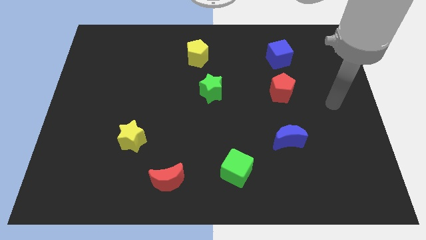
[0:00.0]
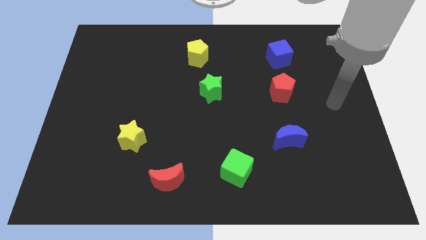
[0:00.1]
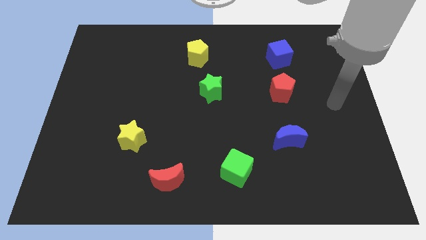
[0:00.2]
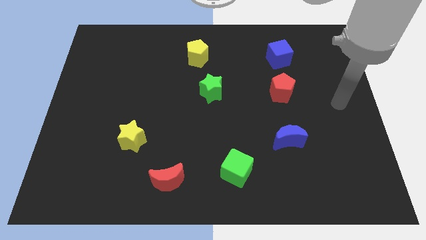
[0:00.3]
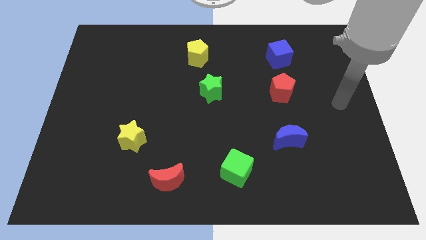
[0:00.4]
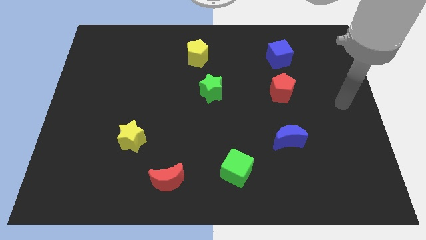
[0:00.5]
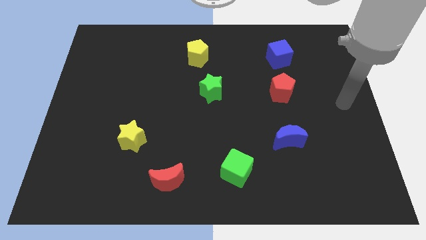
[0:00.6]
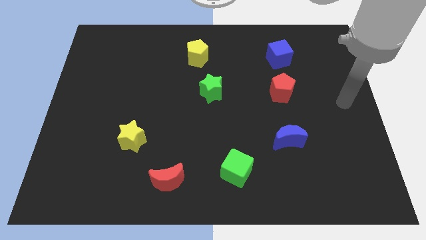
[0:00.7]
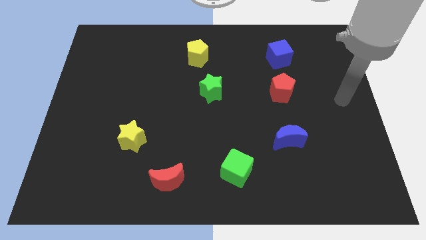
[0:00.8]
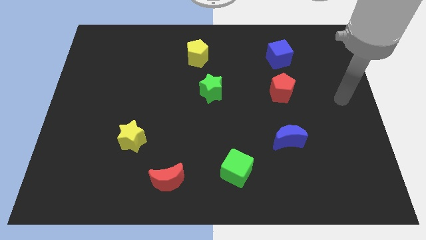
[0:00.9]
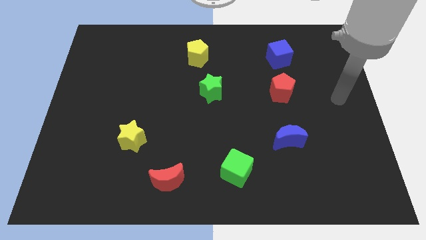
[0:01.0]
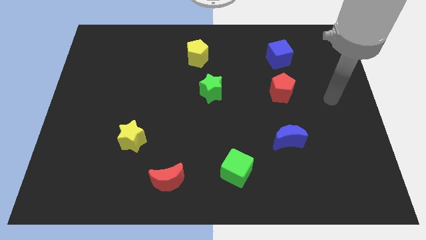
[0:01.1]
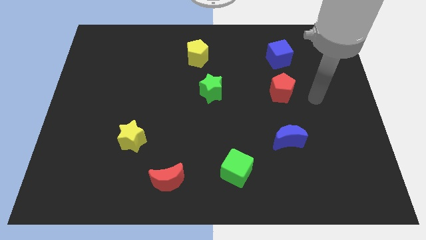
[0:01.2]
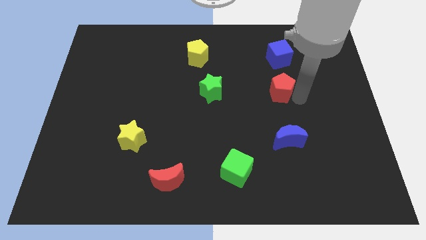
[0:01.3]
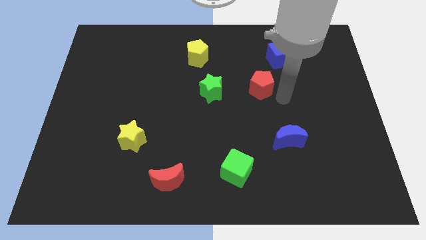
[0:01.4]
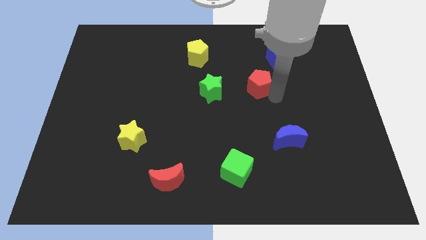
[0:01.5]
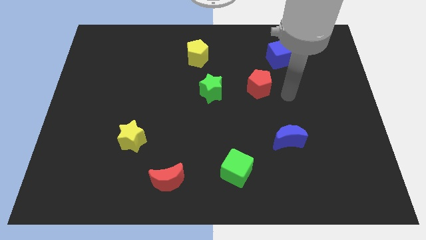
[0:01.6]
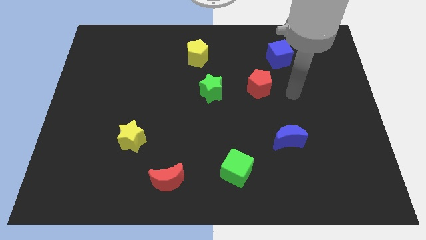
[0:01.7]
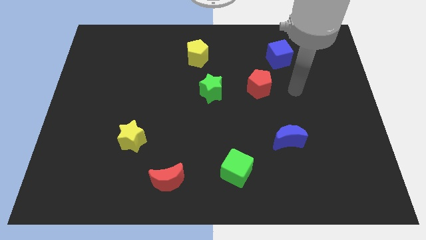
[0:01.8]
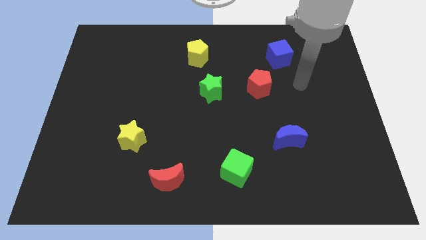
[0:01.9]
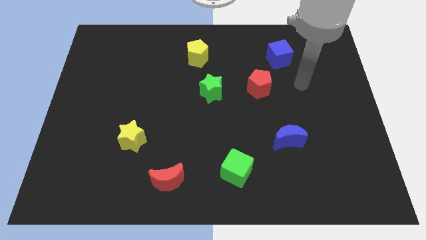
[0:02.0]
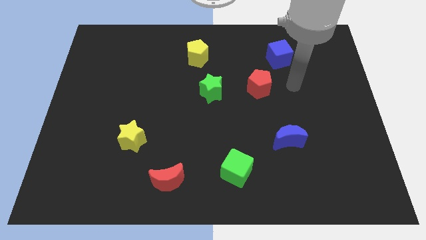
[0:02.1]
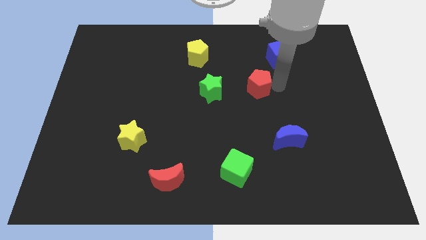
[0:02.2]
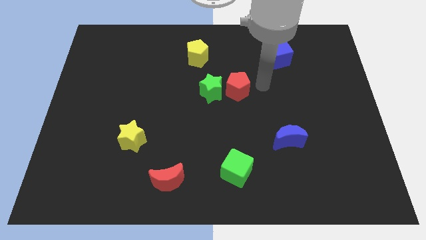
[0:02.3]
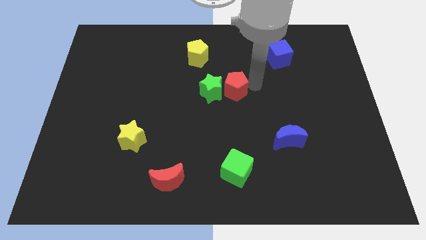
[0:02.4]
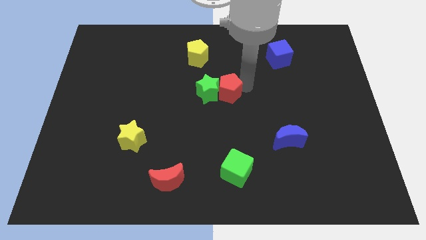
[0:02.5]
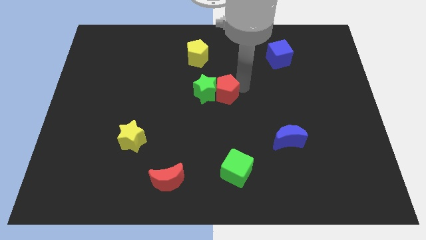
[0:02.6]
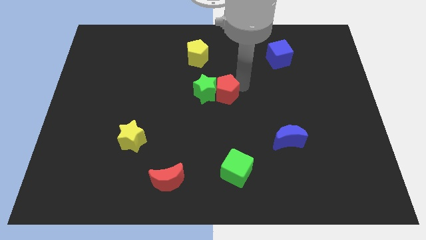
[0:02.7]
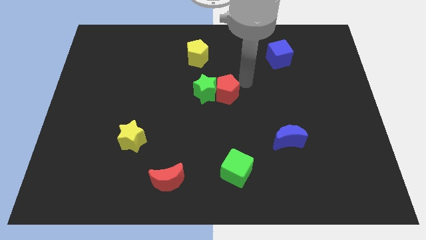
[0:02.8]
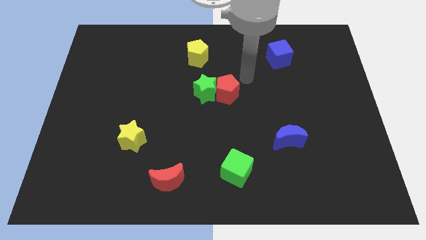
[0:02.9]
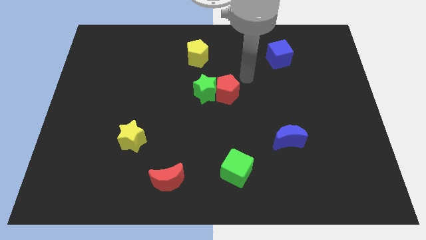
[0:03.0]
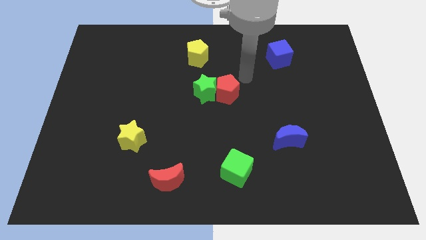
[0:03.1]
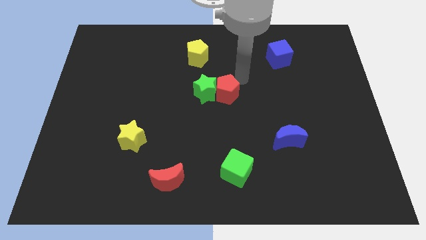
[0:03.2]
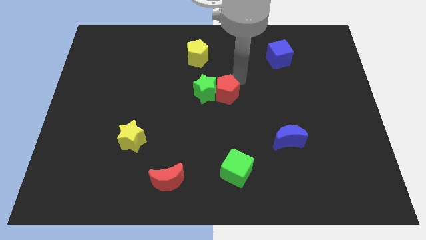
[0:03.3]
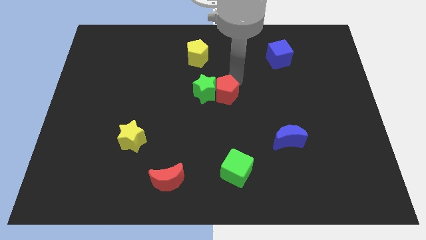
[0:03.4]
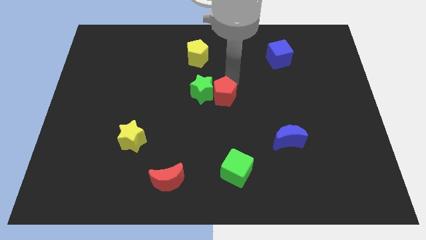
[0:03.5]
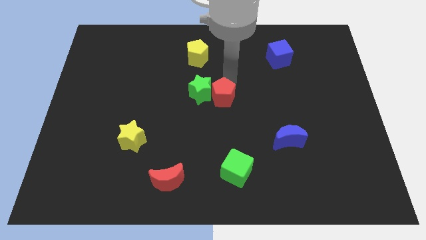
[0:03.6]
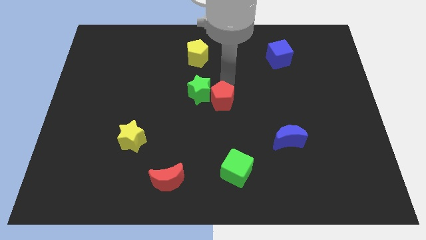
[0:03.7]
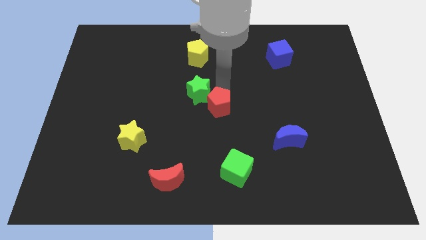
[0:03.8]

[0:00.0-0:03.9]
push red pentagon in to green cube

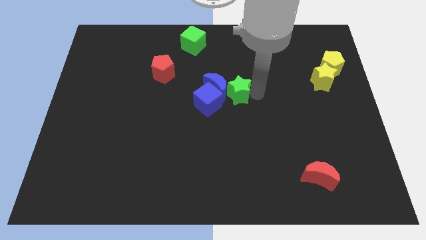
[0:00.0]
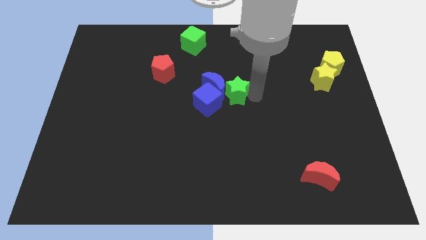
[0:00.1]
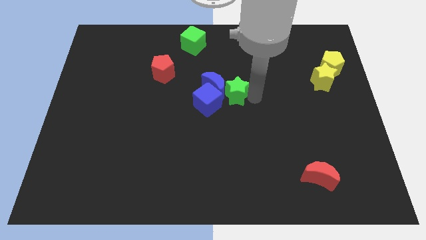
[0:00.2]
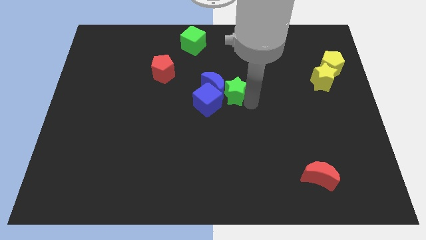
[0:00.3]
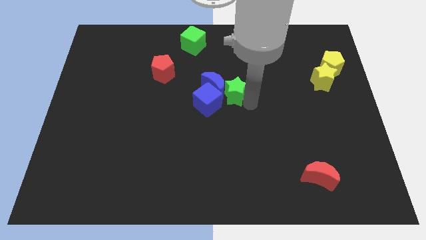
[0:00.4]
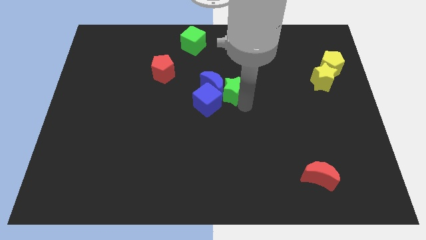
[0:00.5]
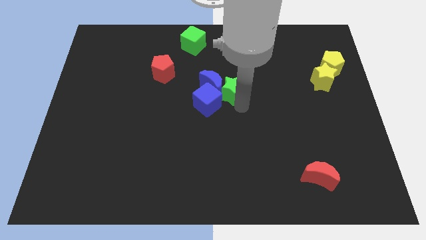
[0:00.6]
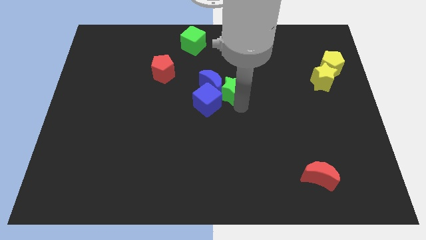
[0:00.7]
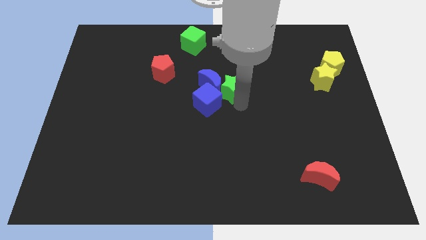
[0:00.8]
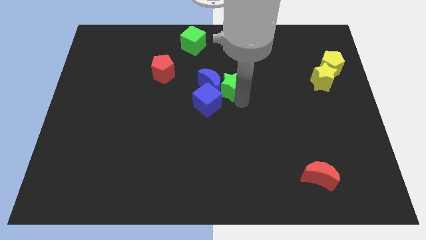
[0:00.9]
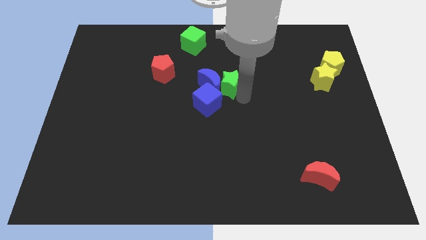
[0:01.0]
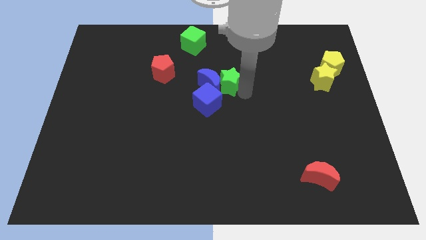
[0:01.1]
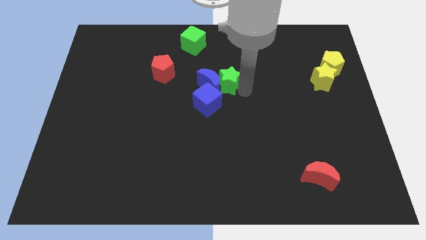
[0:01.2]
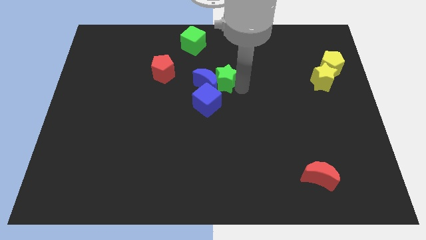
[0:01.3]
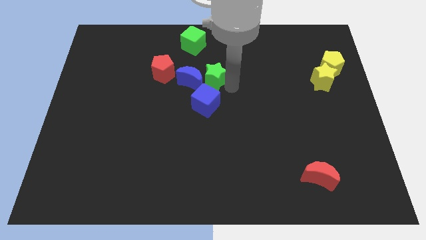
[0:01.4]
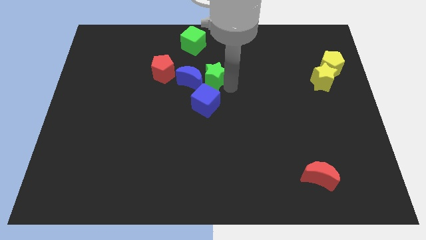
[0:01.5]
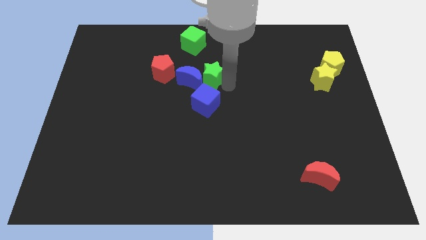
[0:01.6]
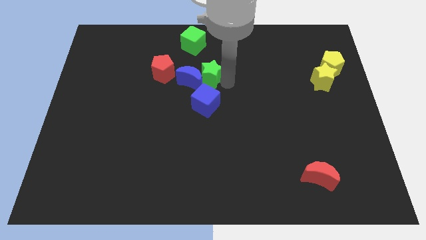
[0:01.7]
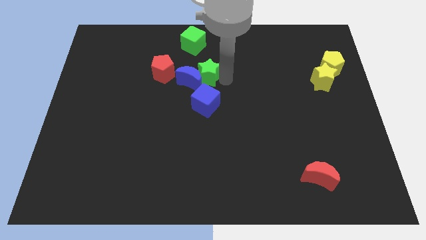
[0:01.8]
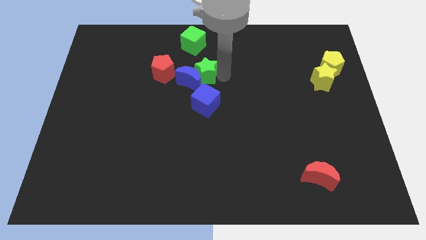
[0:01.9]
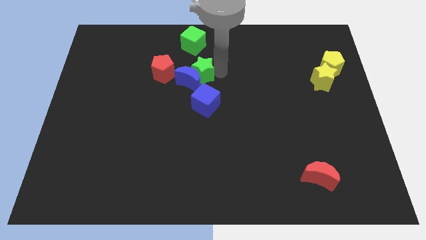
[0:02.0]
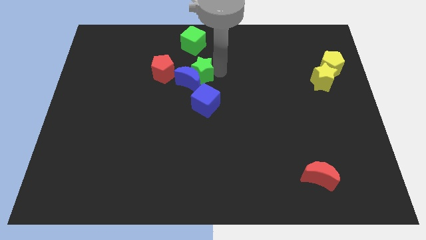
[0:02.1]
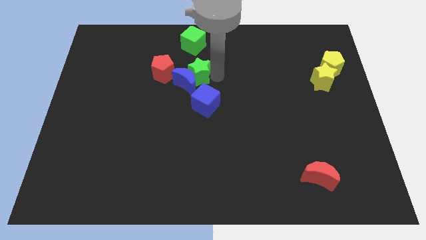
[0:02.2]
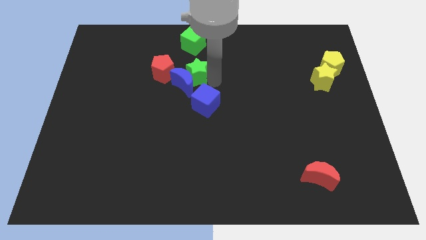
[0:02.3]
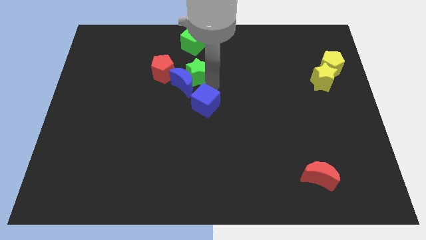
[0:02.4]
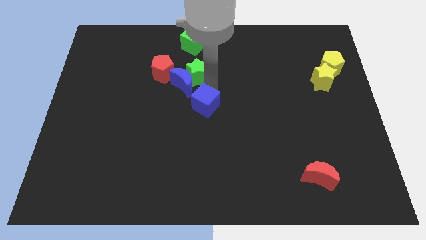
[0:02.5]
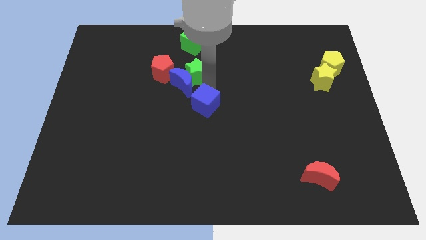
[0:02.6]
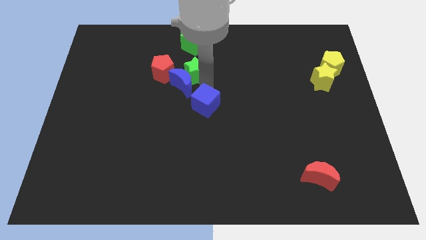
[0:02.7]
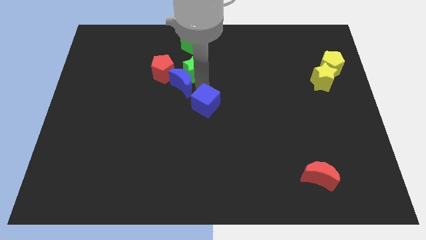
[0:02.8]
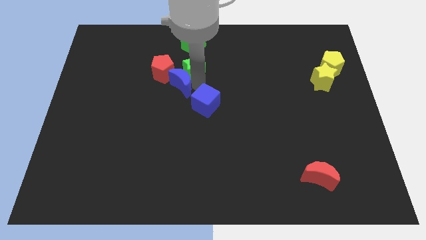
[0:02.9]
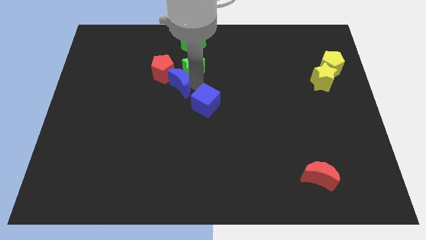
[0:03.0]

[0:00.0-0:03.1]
place green star to the right of red pentagon

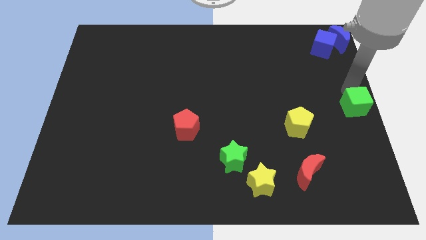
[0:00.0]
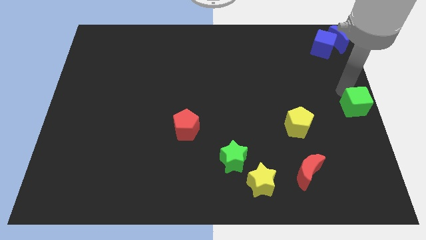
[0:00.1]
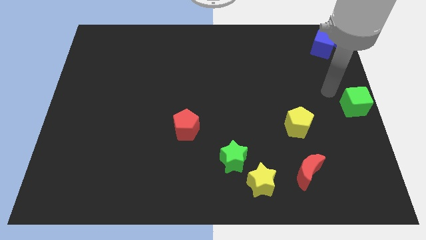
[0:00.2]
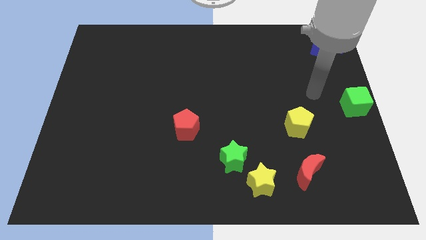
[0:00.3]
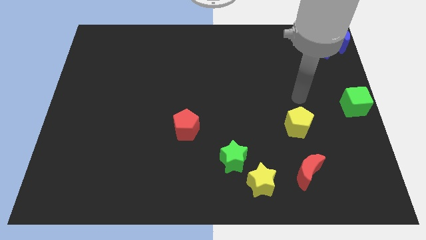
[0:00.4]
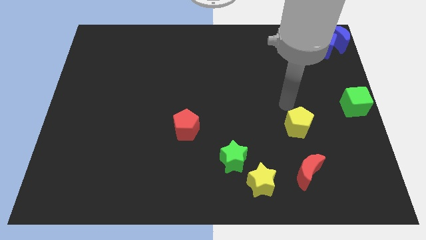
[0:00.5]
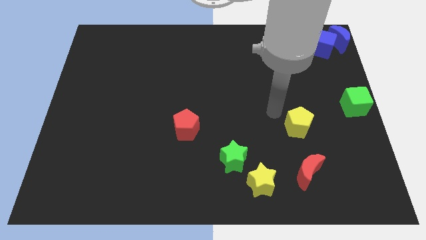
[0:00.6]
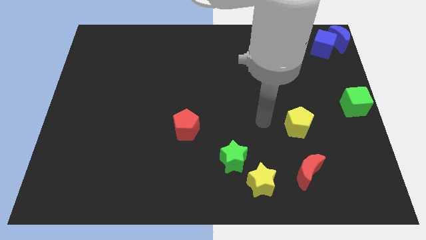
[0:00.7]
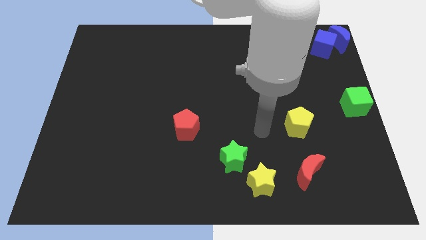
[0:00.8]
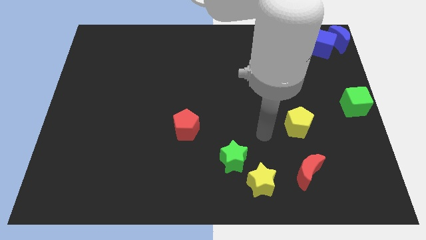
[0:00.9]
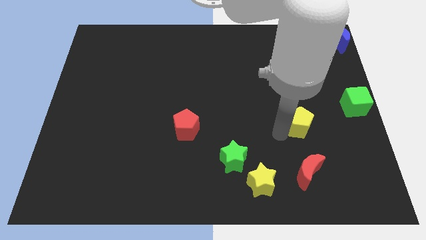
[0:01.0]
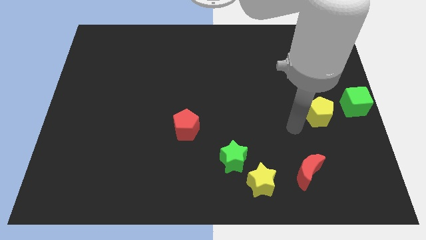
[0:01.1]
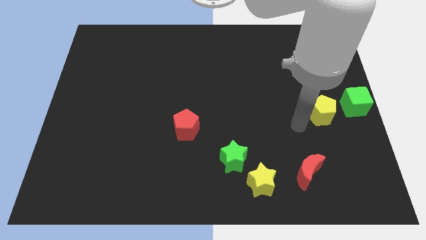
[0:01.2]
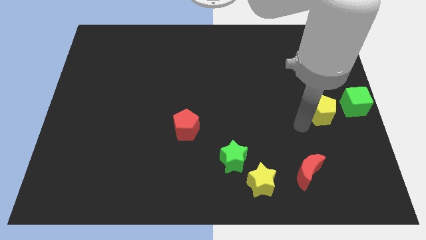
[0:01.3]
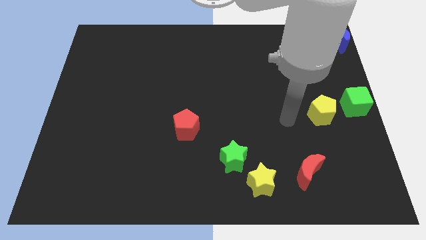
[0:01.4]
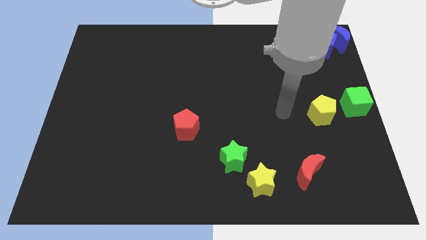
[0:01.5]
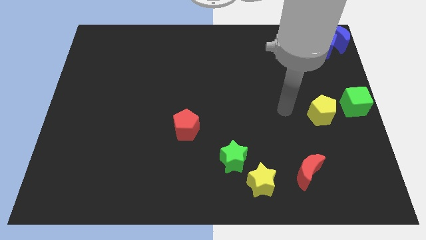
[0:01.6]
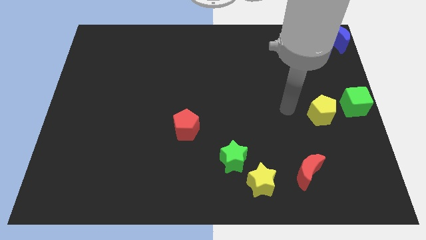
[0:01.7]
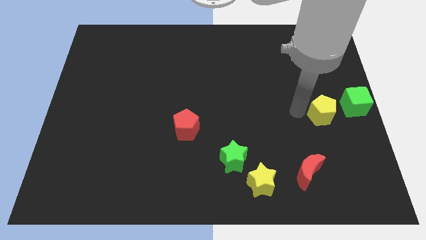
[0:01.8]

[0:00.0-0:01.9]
slide the yellow pentagon close to the green cube
